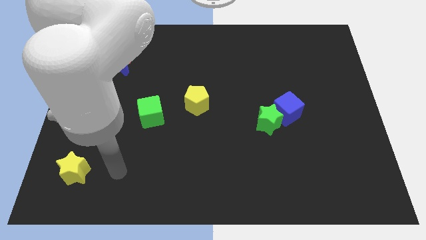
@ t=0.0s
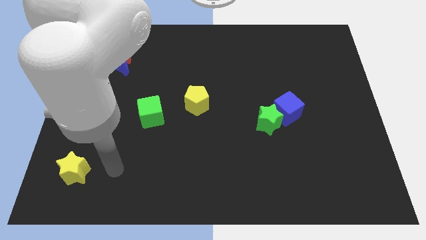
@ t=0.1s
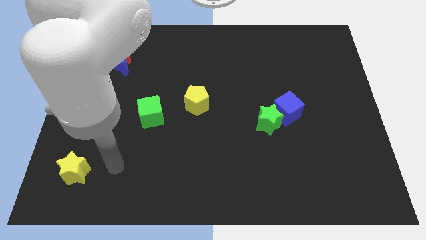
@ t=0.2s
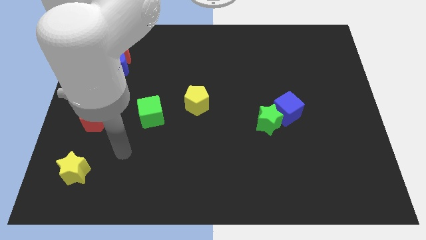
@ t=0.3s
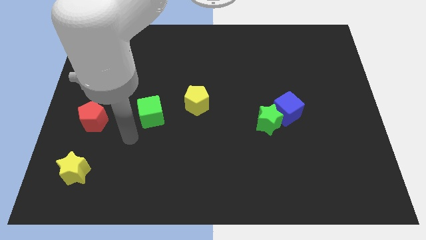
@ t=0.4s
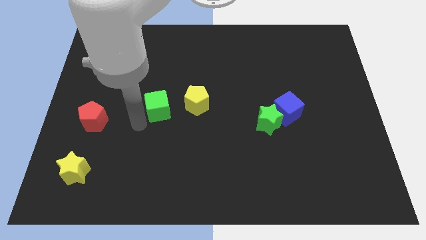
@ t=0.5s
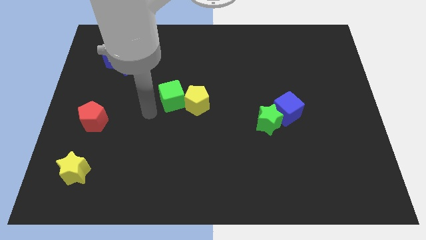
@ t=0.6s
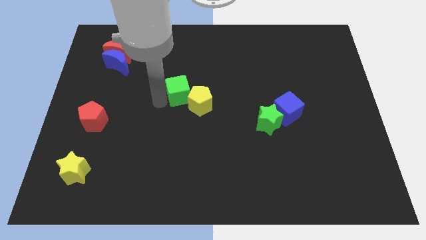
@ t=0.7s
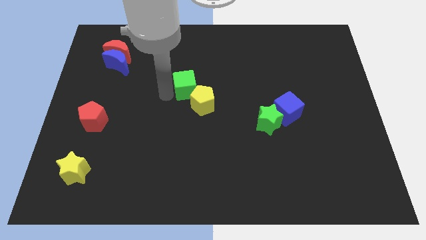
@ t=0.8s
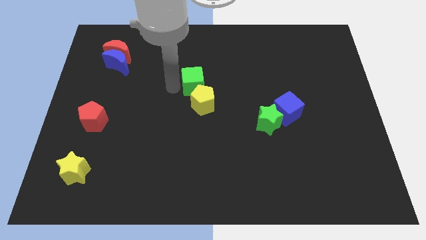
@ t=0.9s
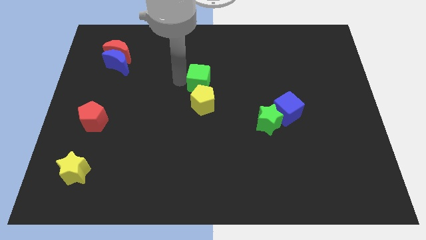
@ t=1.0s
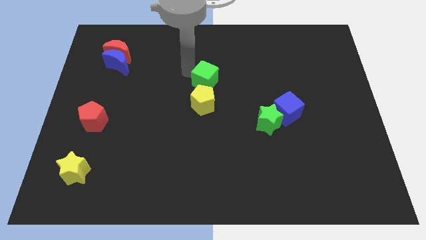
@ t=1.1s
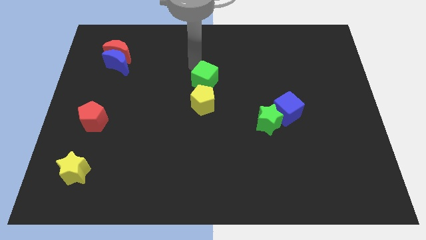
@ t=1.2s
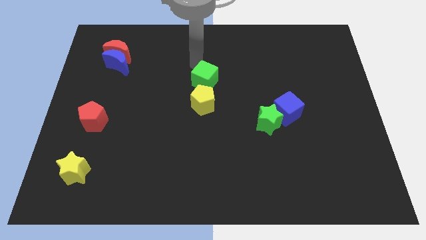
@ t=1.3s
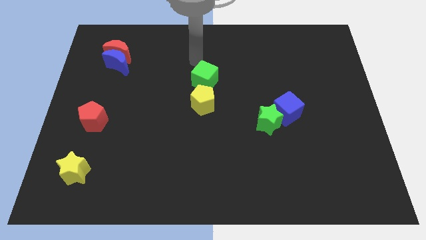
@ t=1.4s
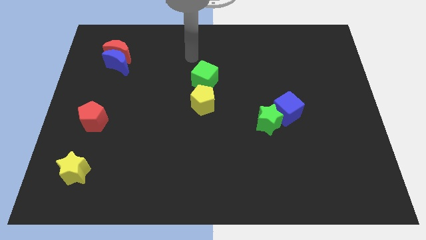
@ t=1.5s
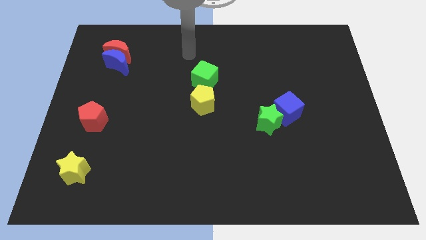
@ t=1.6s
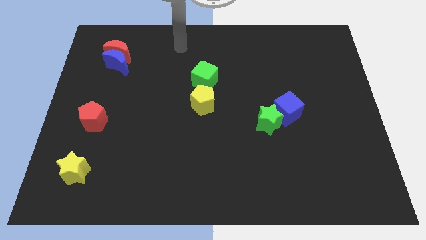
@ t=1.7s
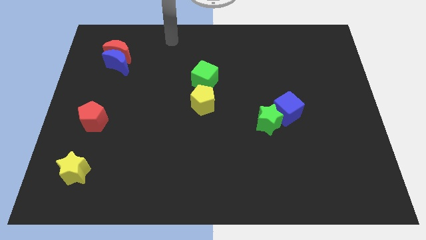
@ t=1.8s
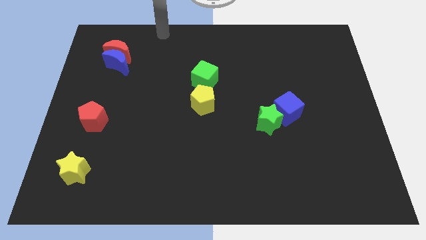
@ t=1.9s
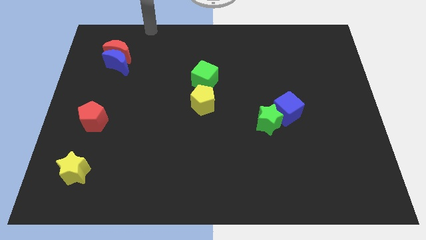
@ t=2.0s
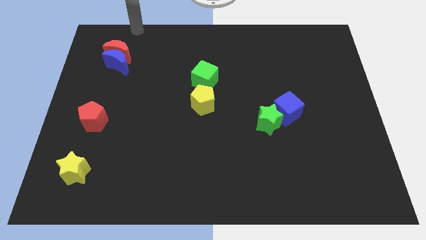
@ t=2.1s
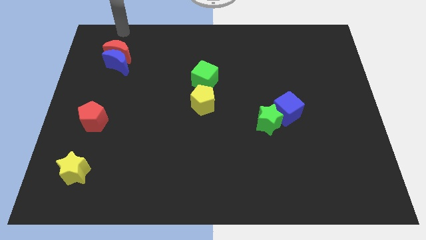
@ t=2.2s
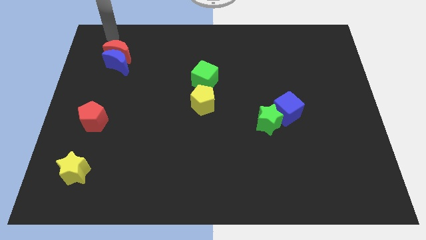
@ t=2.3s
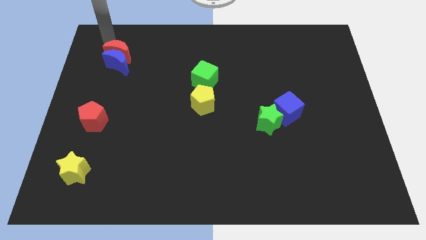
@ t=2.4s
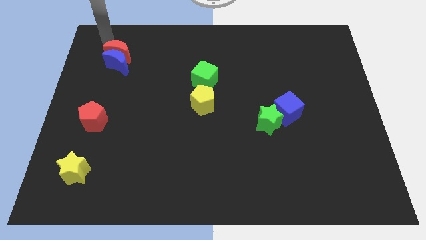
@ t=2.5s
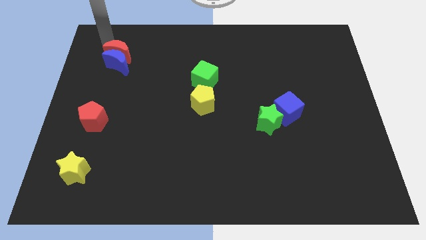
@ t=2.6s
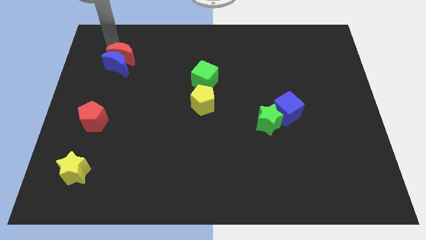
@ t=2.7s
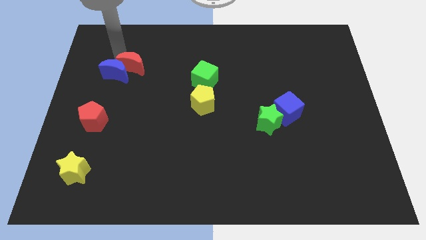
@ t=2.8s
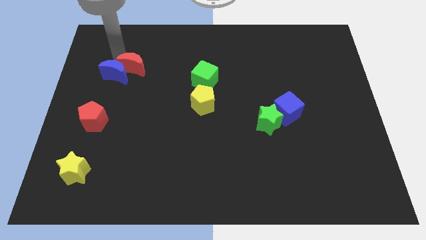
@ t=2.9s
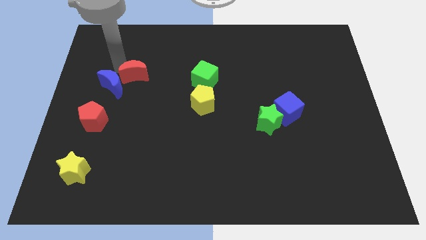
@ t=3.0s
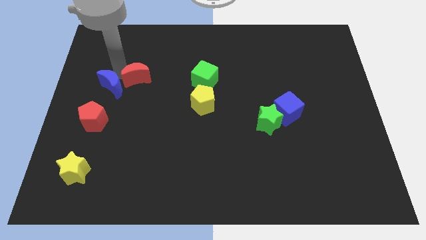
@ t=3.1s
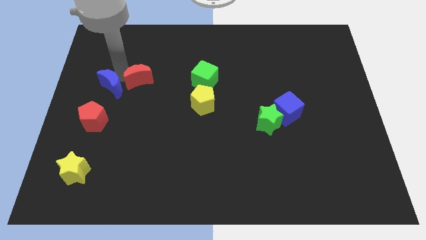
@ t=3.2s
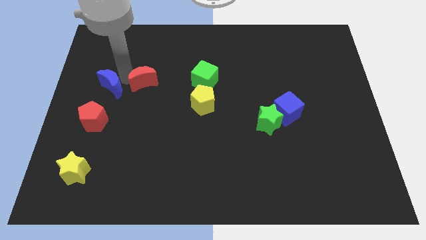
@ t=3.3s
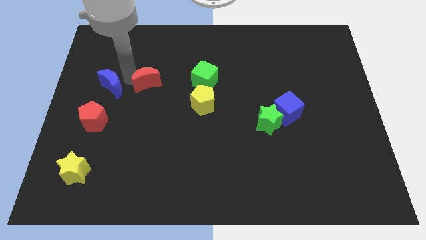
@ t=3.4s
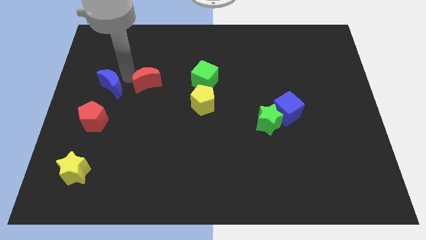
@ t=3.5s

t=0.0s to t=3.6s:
move the green cube and red moon horizontal to each other

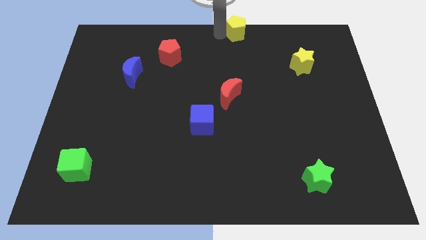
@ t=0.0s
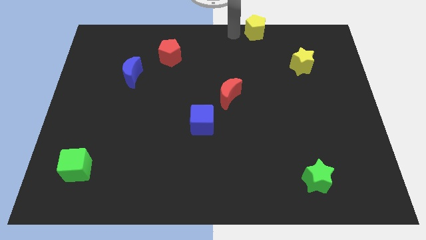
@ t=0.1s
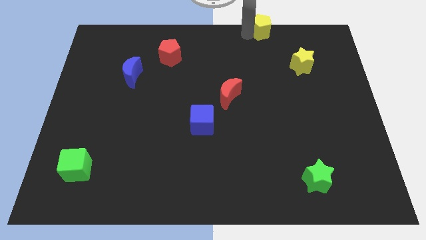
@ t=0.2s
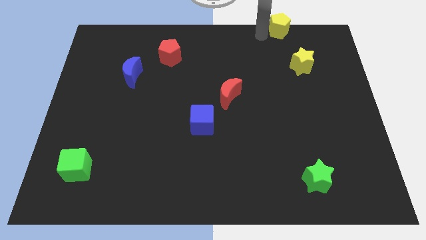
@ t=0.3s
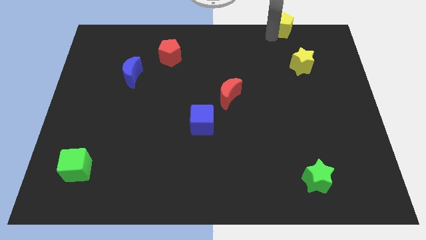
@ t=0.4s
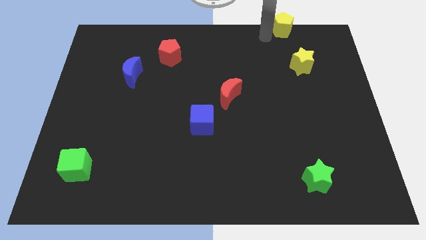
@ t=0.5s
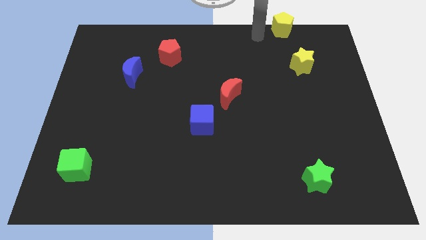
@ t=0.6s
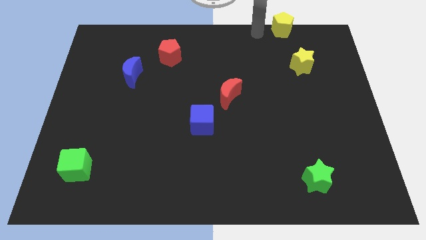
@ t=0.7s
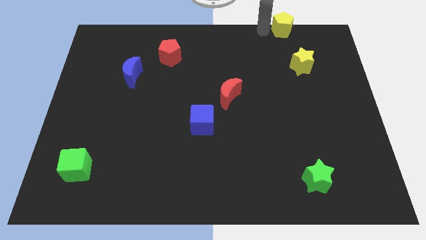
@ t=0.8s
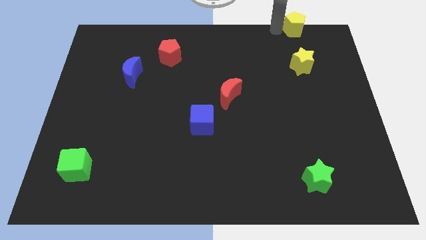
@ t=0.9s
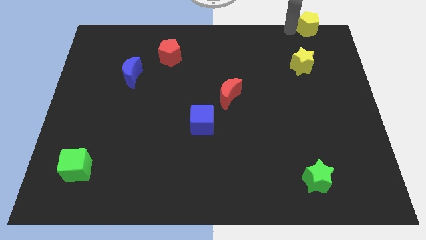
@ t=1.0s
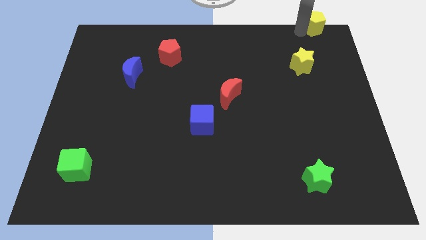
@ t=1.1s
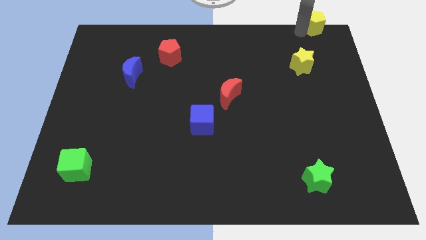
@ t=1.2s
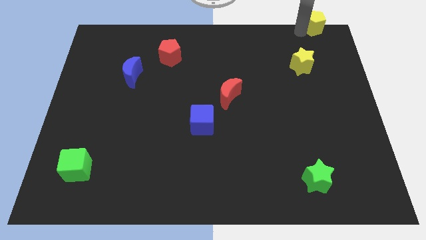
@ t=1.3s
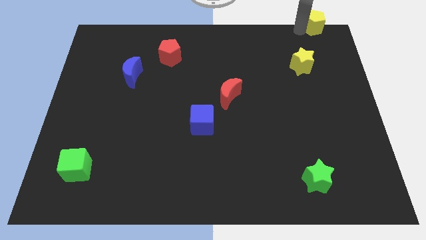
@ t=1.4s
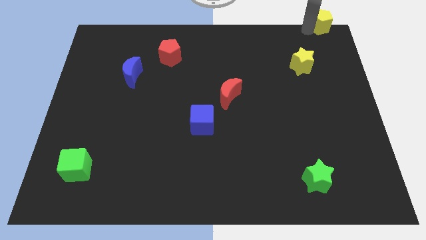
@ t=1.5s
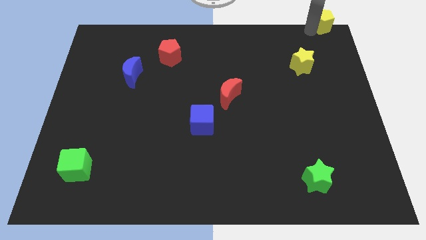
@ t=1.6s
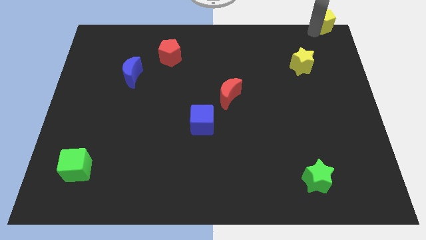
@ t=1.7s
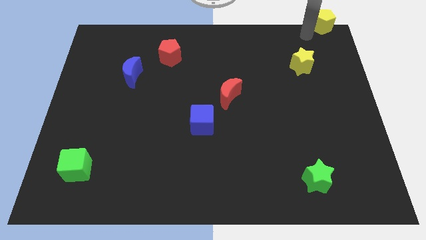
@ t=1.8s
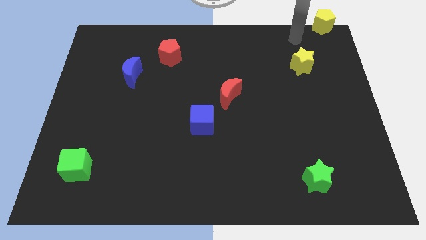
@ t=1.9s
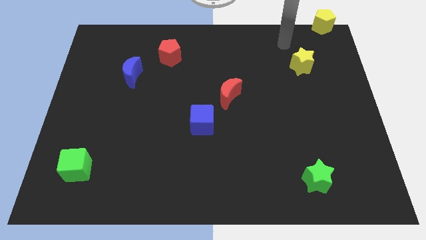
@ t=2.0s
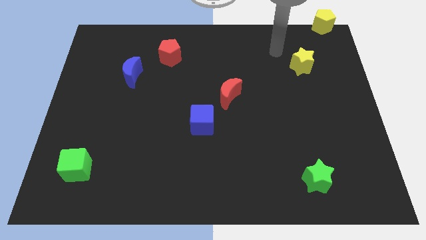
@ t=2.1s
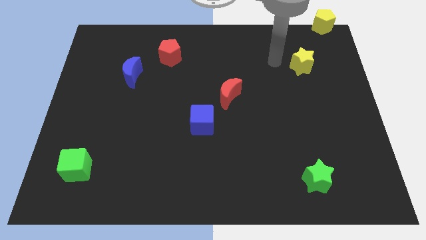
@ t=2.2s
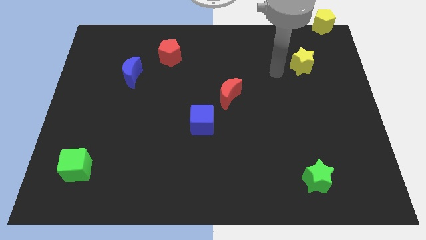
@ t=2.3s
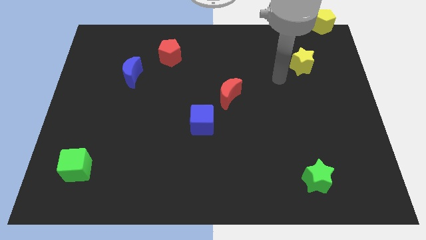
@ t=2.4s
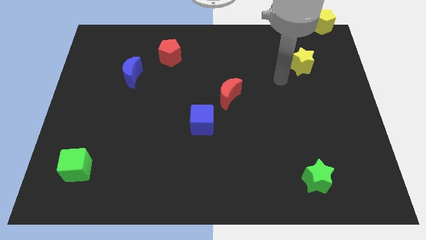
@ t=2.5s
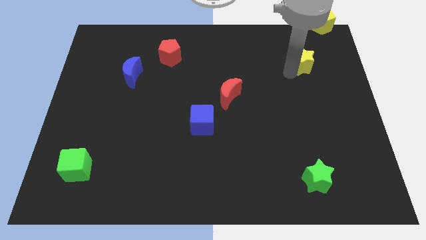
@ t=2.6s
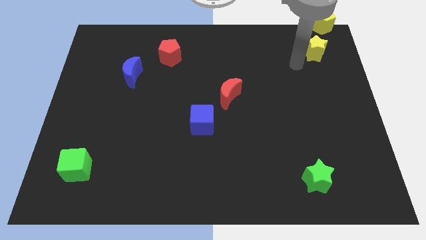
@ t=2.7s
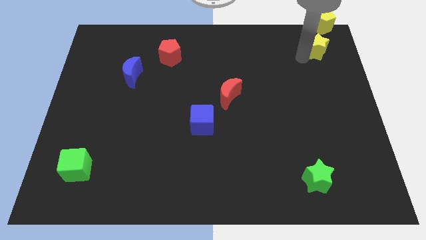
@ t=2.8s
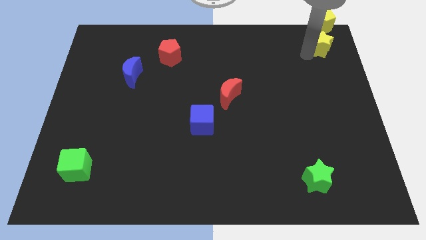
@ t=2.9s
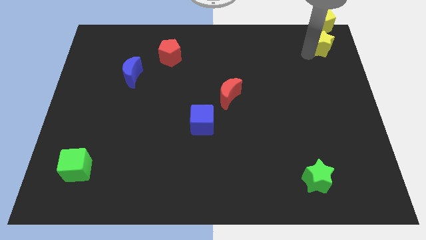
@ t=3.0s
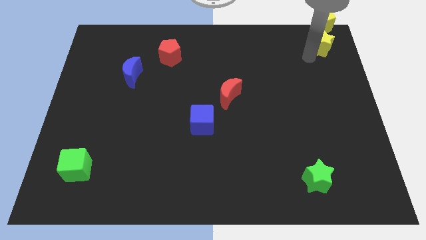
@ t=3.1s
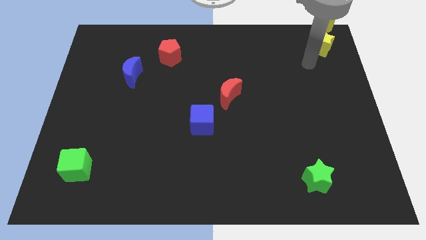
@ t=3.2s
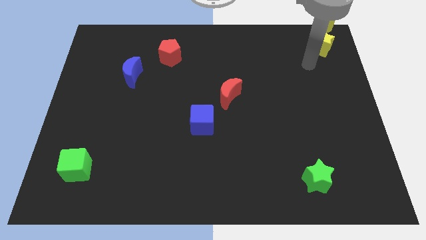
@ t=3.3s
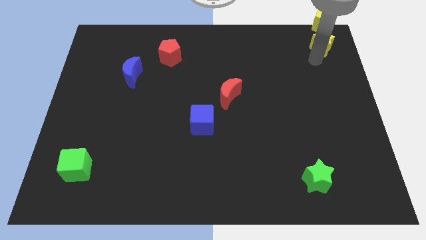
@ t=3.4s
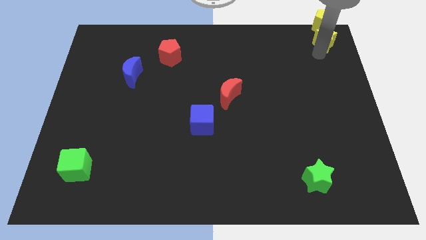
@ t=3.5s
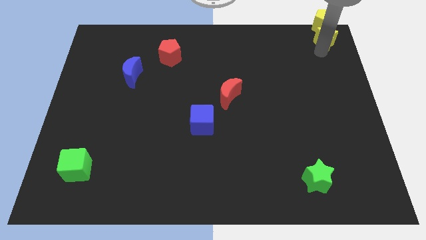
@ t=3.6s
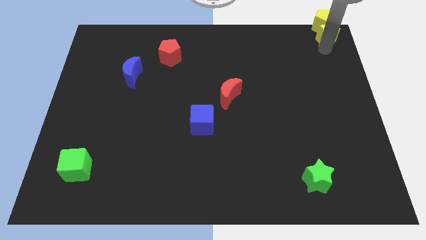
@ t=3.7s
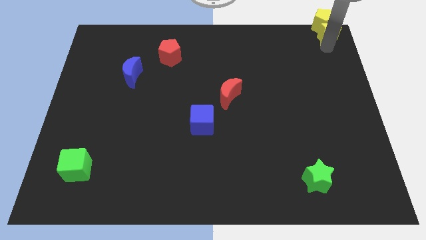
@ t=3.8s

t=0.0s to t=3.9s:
push the yellow star towards the bottom of the yellow pentagon

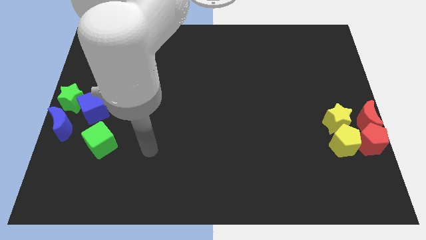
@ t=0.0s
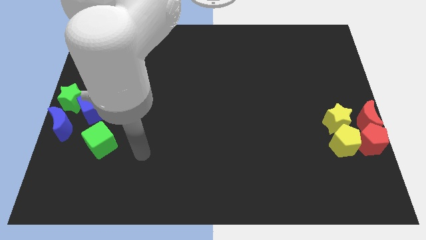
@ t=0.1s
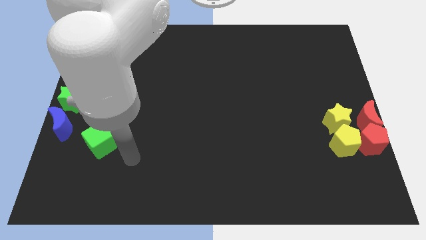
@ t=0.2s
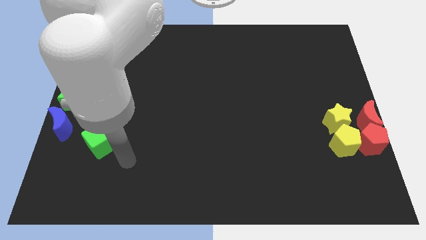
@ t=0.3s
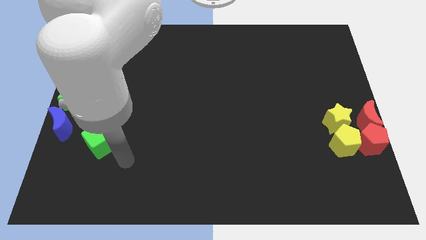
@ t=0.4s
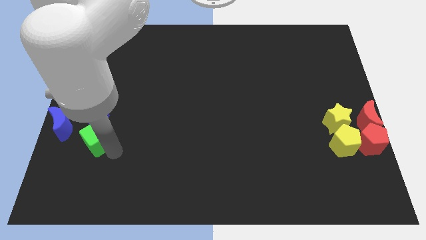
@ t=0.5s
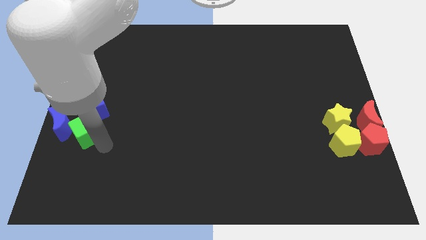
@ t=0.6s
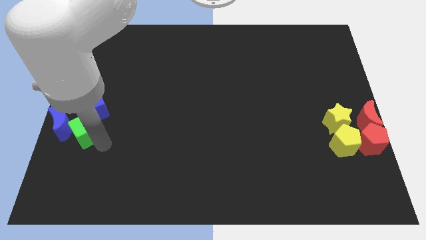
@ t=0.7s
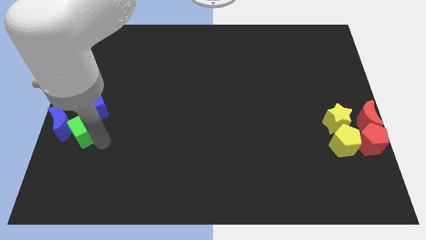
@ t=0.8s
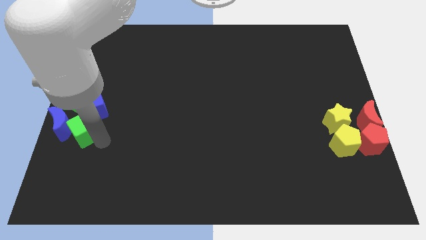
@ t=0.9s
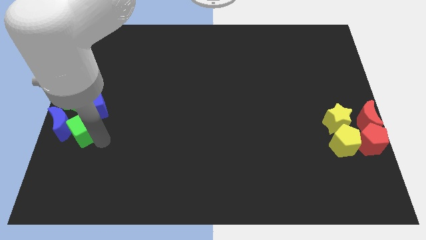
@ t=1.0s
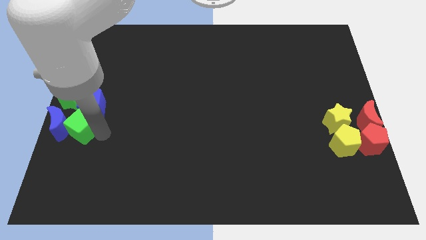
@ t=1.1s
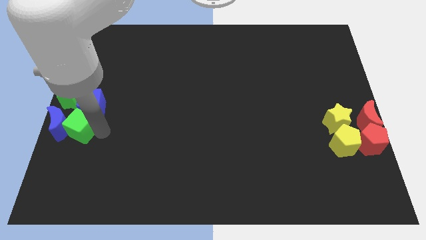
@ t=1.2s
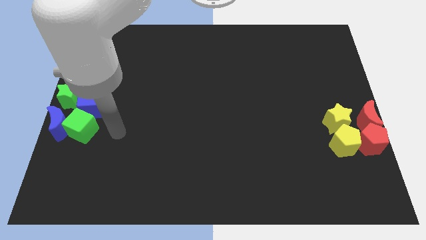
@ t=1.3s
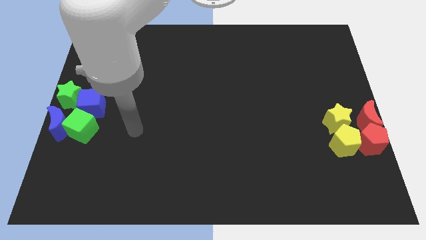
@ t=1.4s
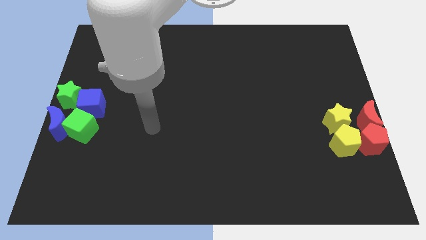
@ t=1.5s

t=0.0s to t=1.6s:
push the green cube into the blue blocks
